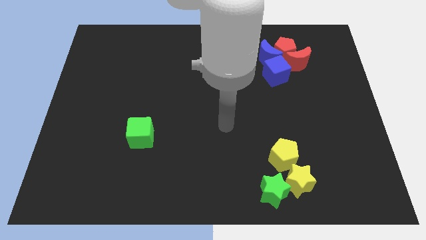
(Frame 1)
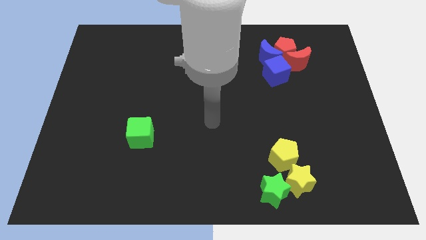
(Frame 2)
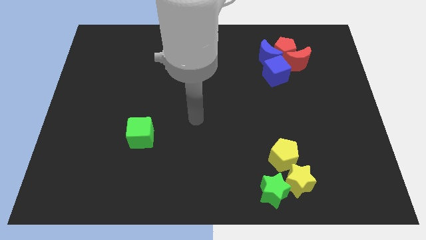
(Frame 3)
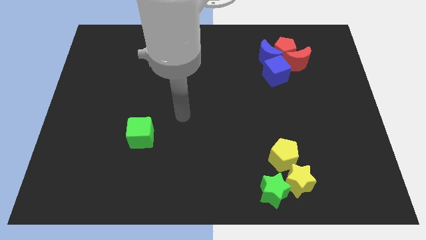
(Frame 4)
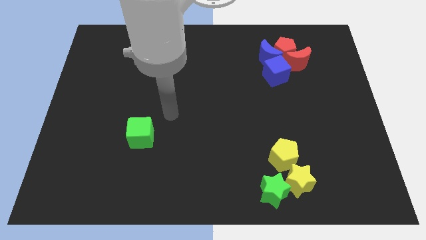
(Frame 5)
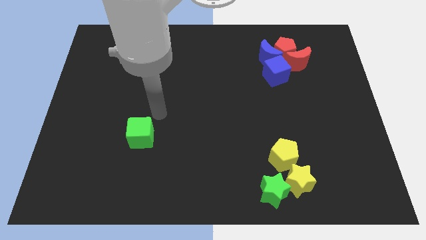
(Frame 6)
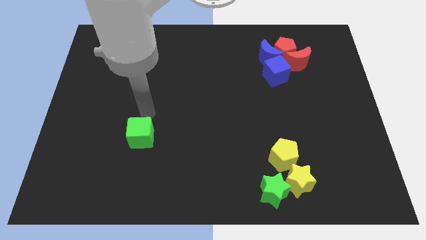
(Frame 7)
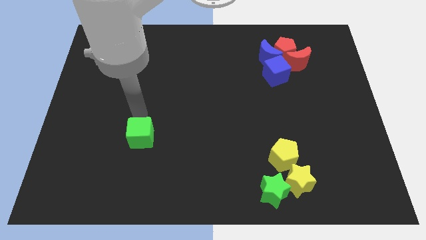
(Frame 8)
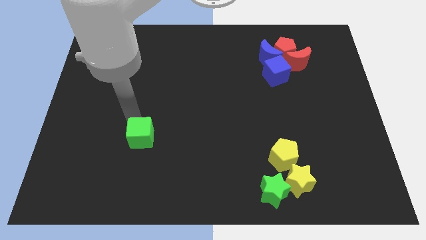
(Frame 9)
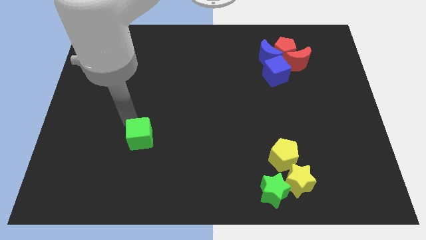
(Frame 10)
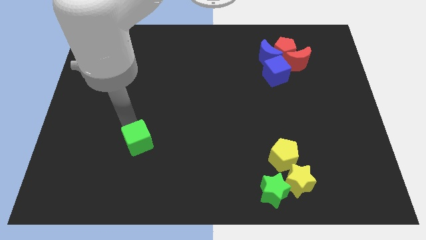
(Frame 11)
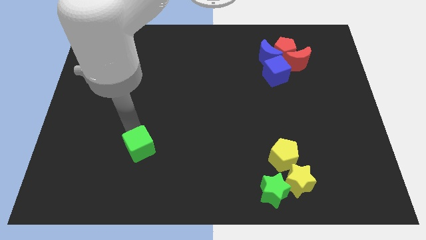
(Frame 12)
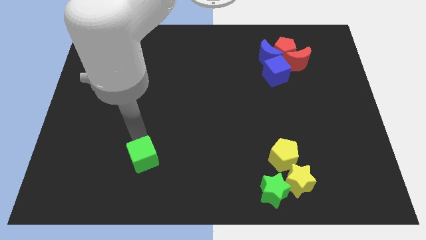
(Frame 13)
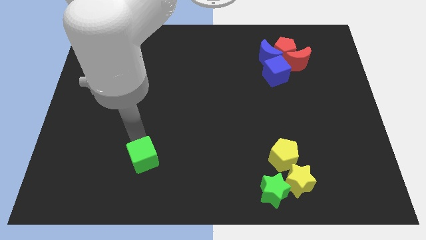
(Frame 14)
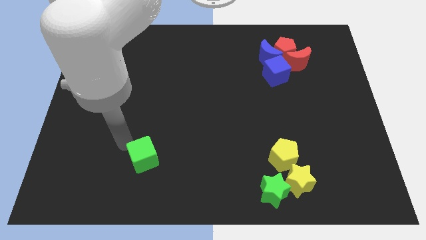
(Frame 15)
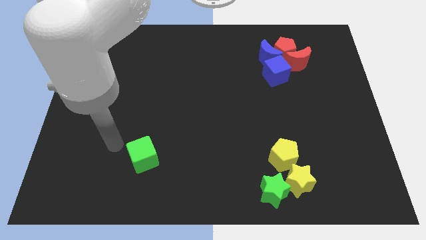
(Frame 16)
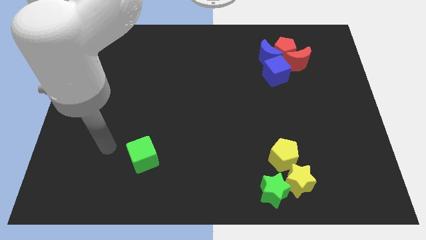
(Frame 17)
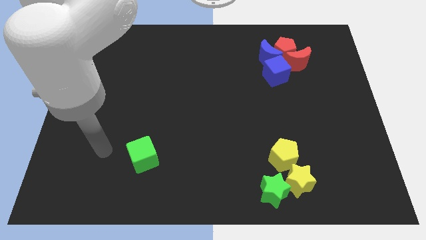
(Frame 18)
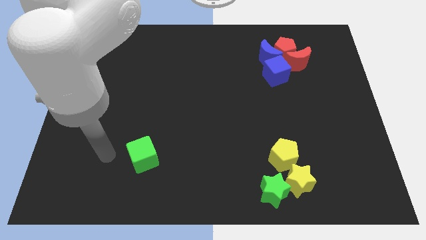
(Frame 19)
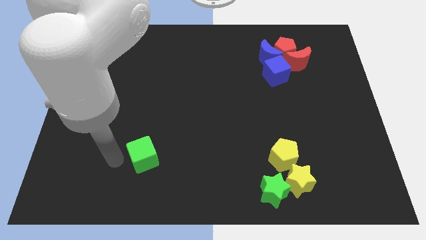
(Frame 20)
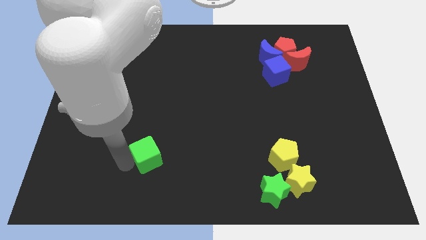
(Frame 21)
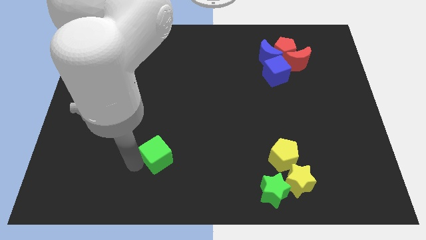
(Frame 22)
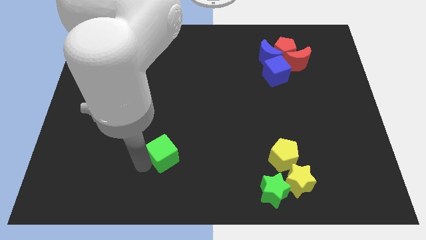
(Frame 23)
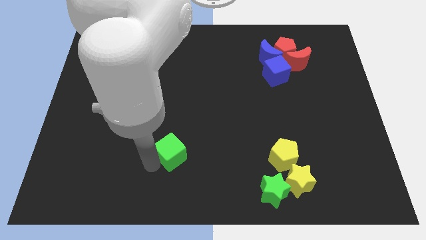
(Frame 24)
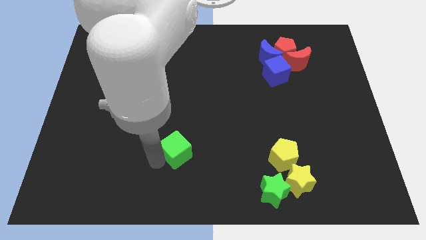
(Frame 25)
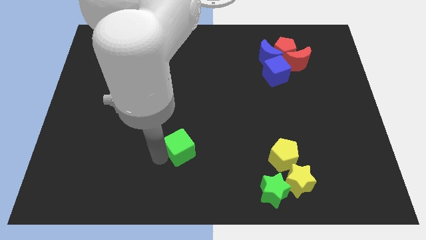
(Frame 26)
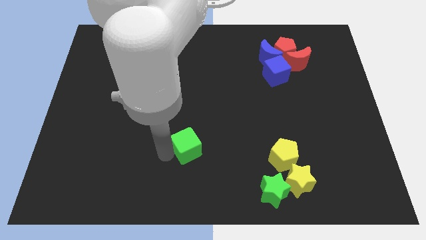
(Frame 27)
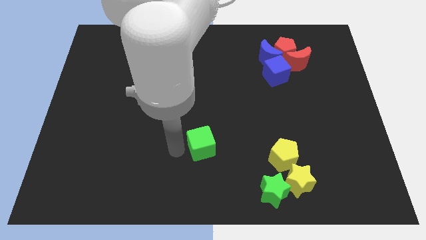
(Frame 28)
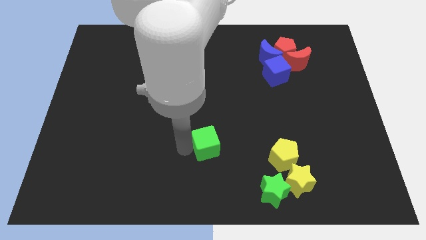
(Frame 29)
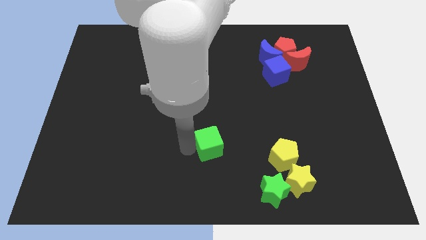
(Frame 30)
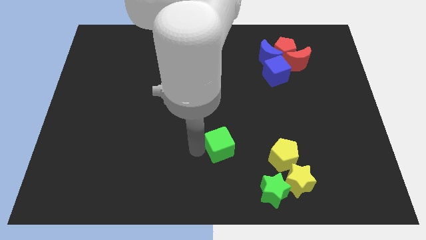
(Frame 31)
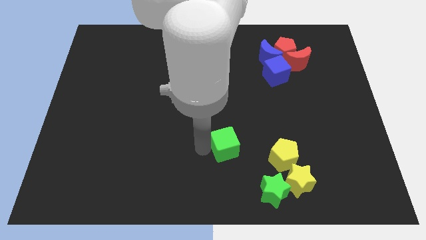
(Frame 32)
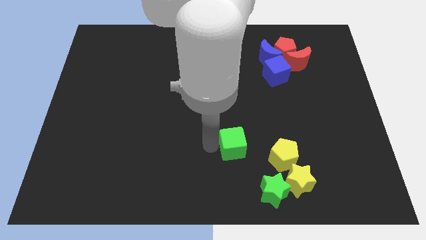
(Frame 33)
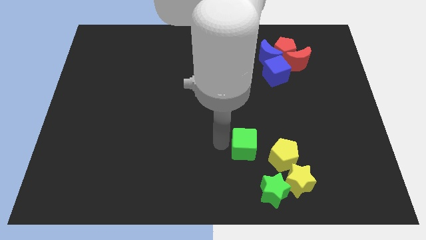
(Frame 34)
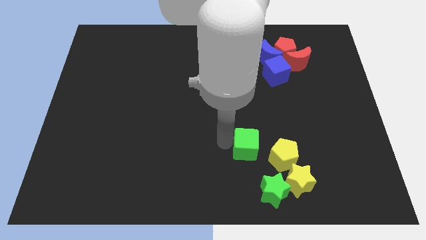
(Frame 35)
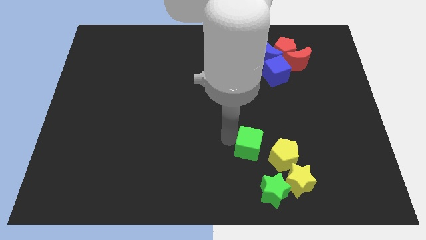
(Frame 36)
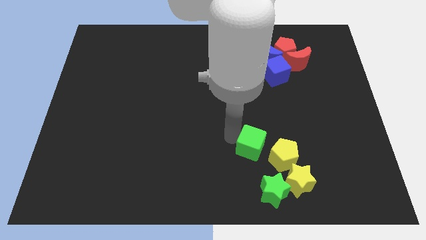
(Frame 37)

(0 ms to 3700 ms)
move the green cube to the left of yellow pentagon

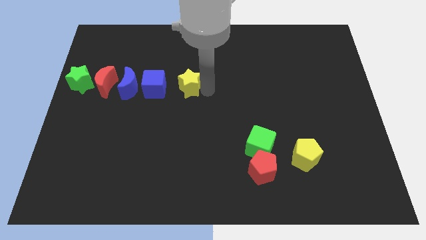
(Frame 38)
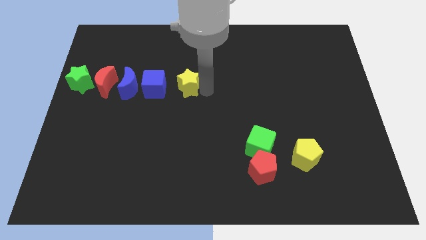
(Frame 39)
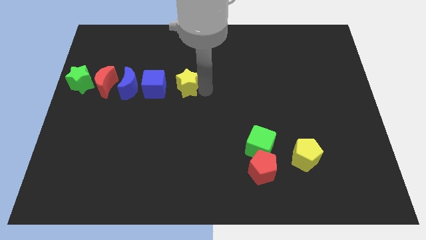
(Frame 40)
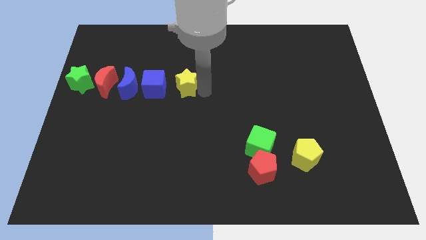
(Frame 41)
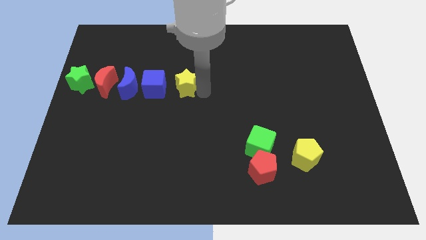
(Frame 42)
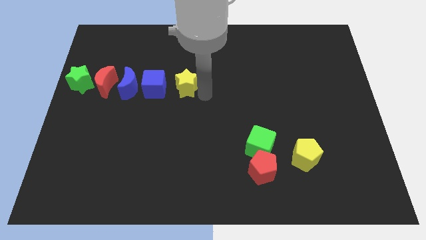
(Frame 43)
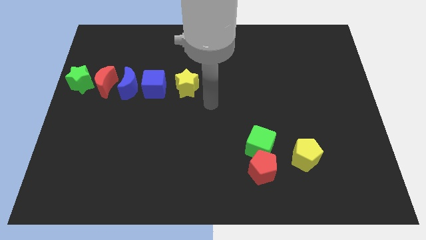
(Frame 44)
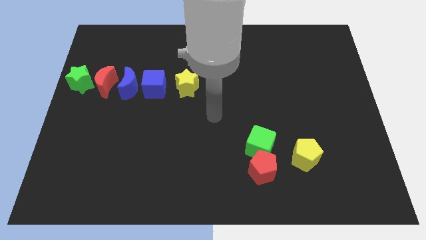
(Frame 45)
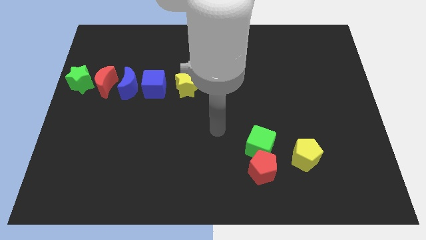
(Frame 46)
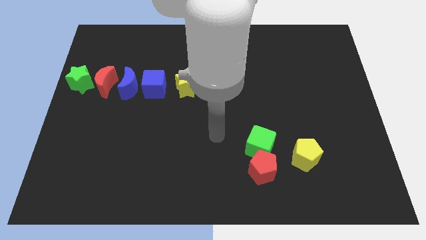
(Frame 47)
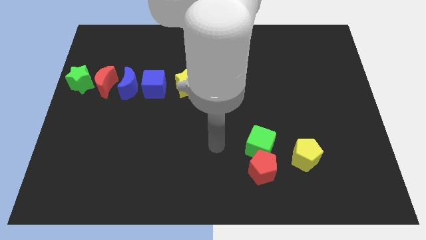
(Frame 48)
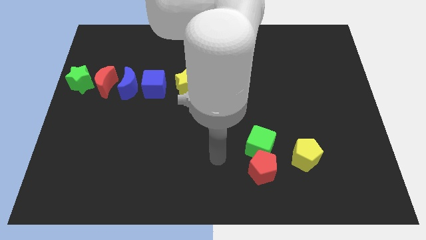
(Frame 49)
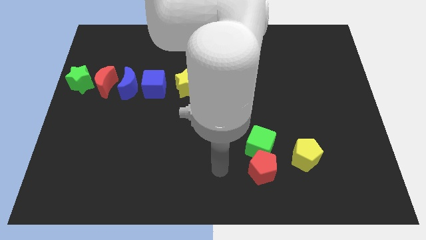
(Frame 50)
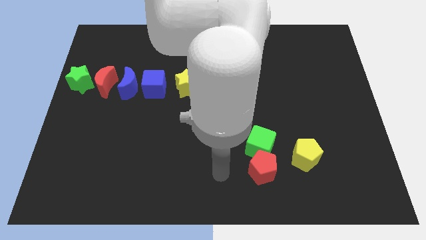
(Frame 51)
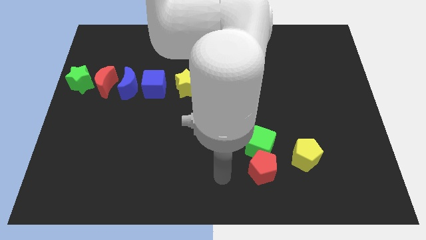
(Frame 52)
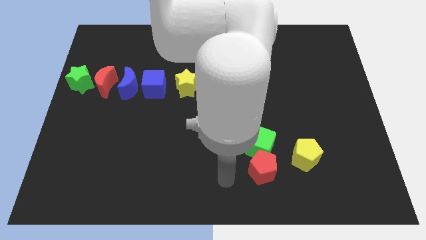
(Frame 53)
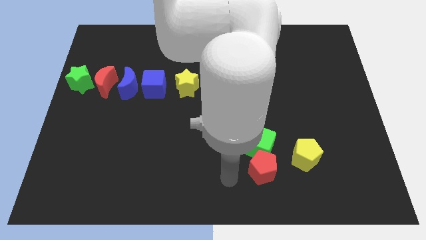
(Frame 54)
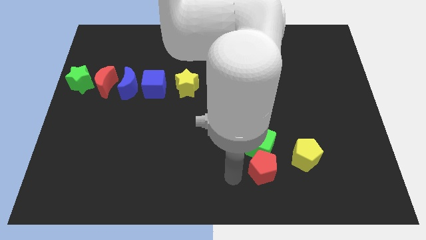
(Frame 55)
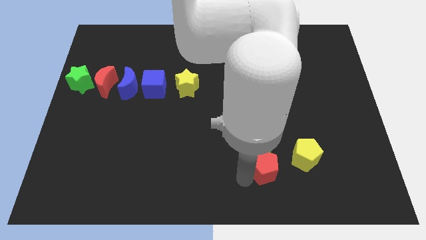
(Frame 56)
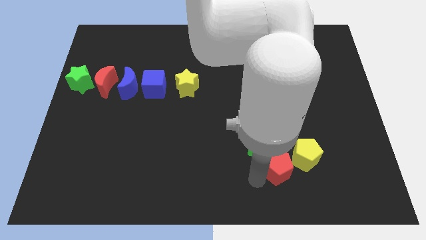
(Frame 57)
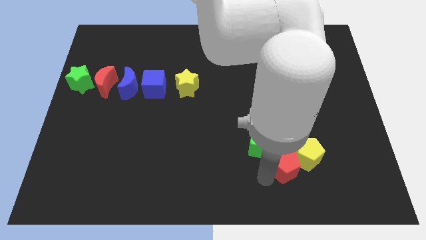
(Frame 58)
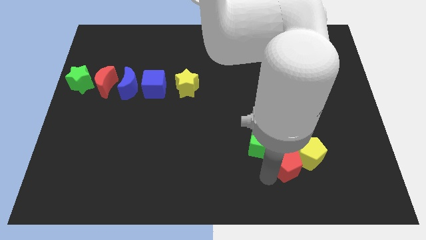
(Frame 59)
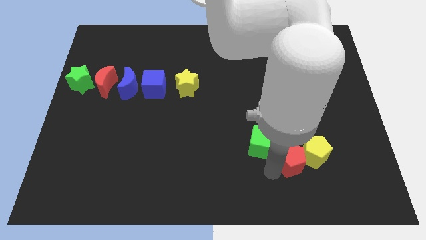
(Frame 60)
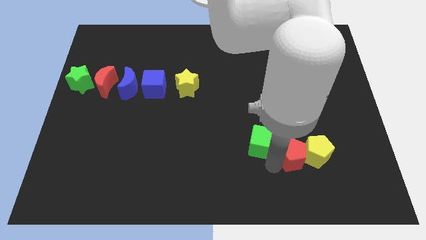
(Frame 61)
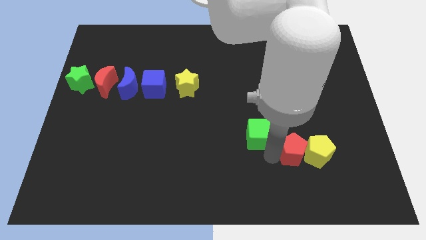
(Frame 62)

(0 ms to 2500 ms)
push the red pentagon into the yellow pentagon

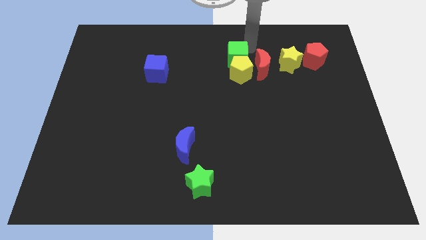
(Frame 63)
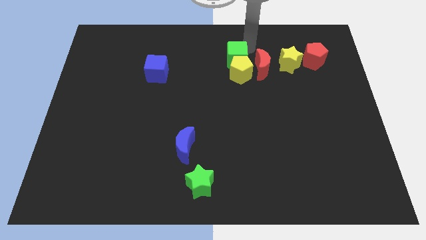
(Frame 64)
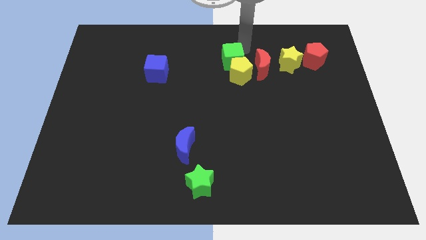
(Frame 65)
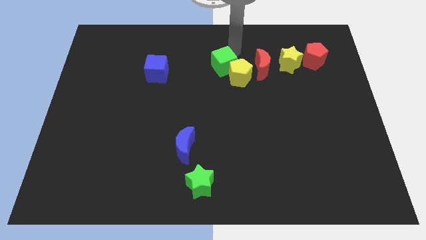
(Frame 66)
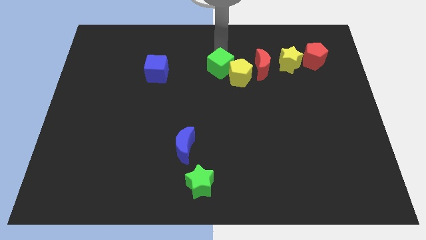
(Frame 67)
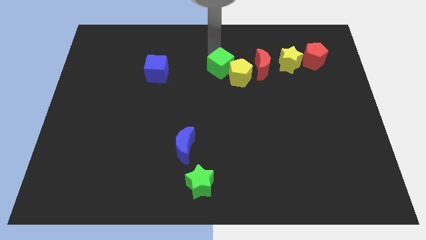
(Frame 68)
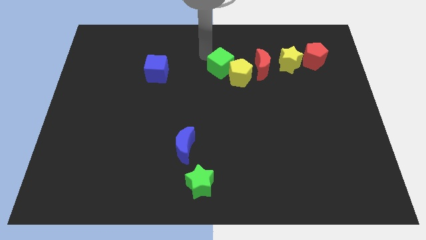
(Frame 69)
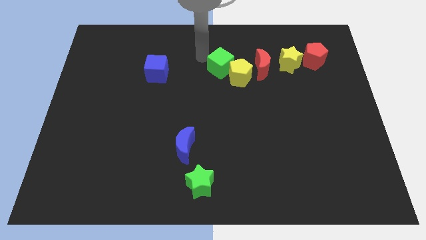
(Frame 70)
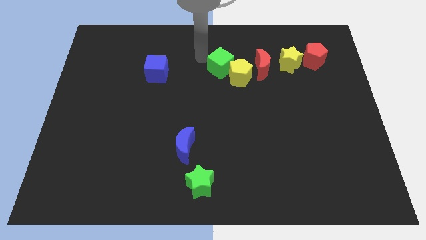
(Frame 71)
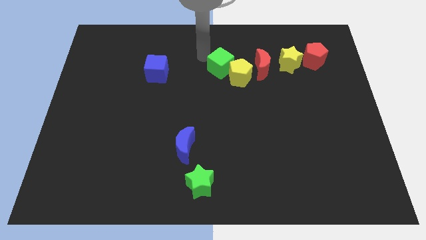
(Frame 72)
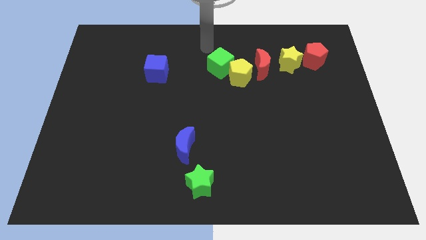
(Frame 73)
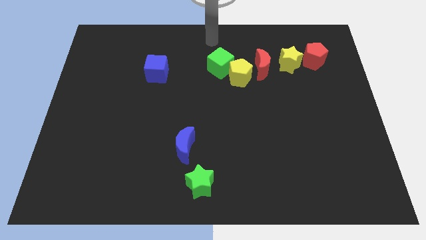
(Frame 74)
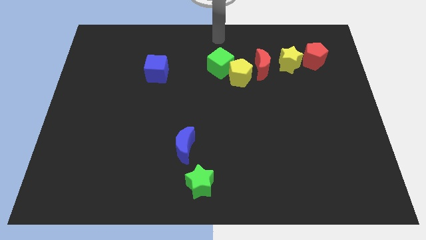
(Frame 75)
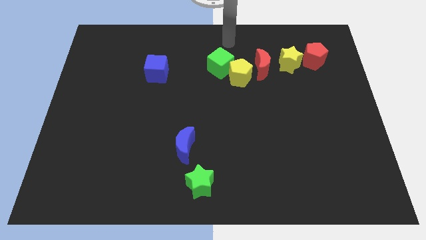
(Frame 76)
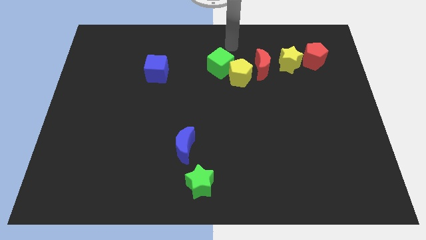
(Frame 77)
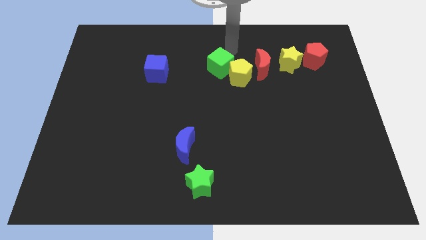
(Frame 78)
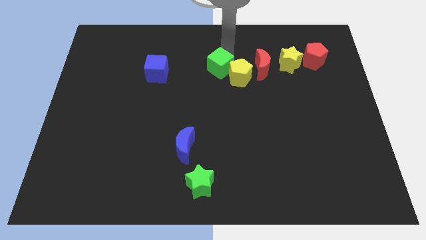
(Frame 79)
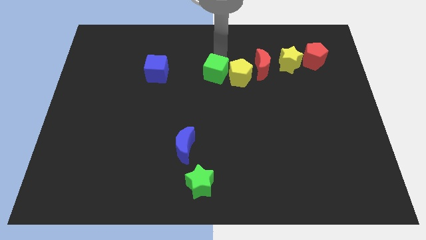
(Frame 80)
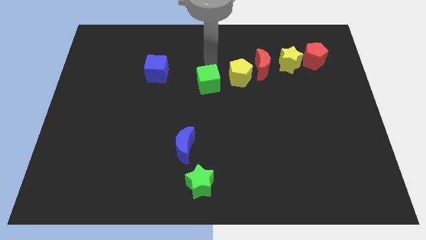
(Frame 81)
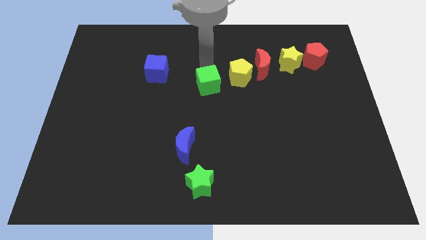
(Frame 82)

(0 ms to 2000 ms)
separate the green cube from the yellow pentagon

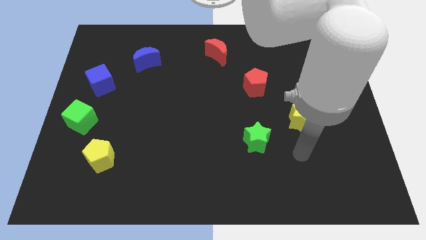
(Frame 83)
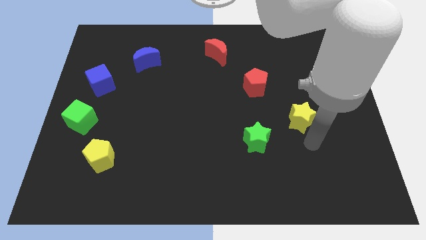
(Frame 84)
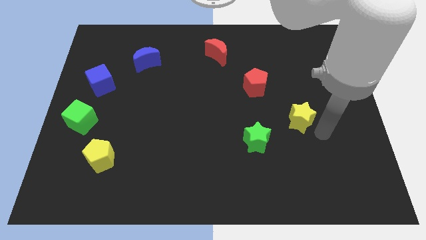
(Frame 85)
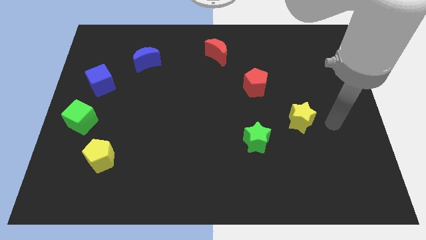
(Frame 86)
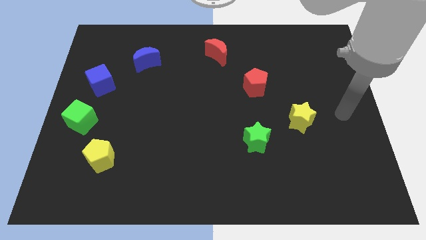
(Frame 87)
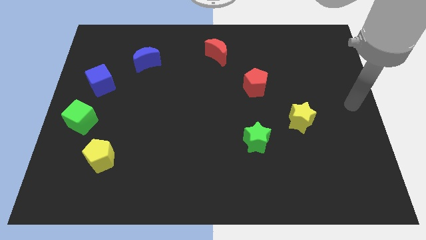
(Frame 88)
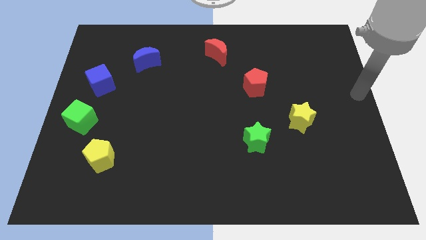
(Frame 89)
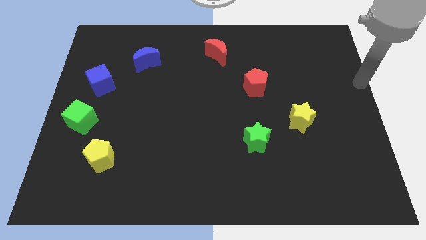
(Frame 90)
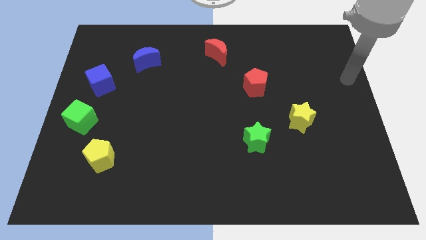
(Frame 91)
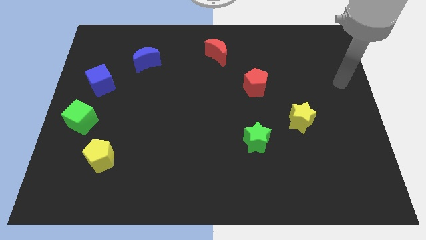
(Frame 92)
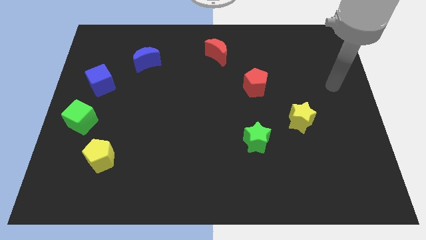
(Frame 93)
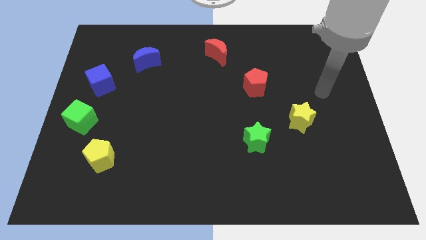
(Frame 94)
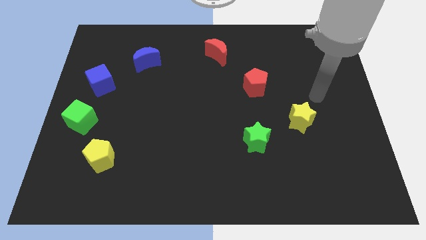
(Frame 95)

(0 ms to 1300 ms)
move the arm above to the yellow star
